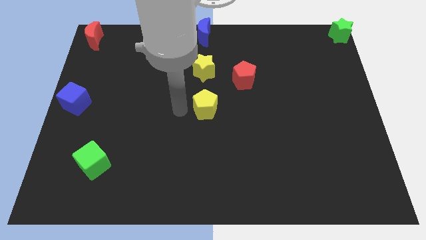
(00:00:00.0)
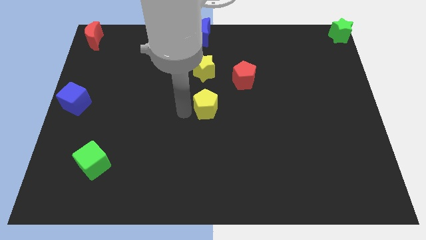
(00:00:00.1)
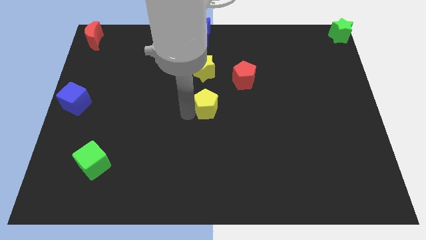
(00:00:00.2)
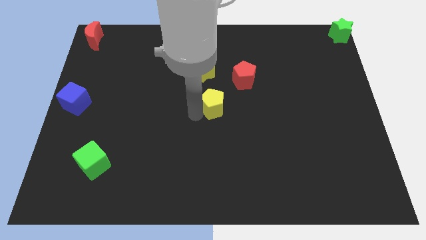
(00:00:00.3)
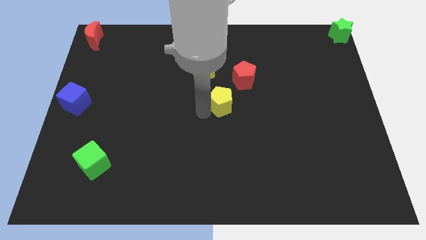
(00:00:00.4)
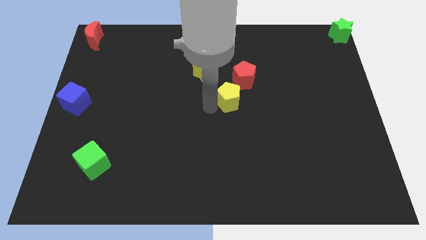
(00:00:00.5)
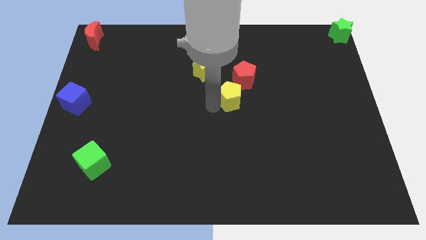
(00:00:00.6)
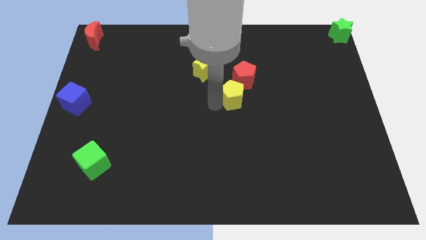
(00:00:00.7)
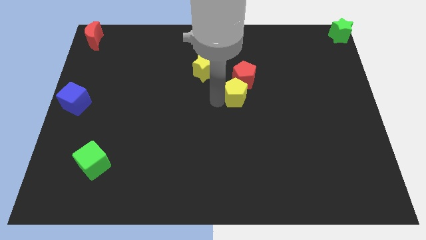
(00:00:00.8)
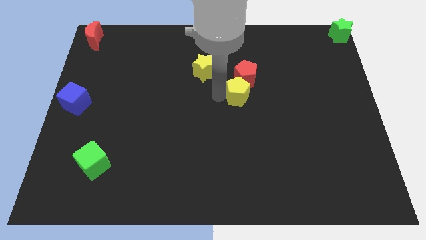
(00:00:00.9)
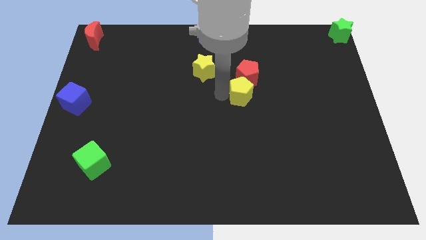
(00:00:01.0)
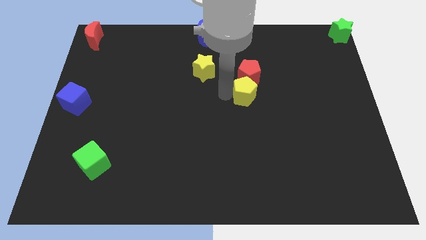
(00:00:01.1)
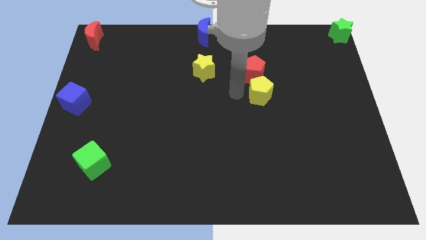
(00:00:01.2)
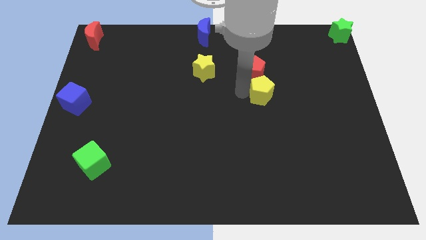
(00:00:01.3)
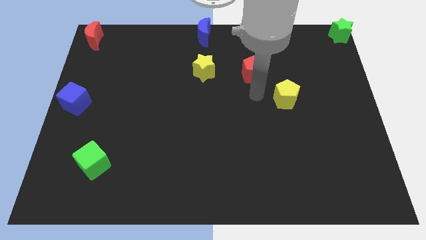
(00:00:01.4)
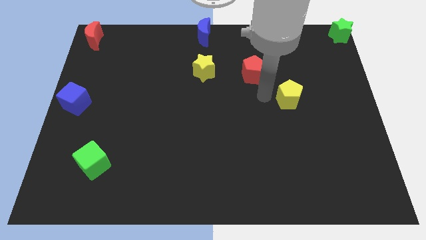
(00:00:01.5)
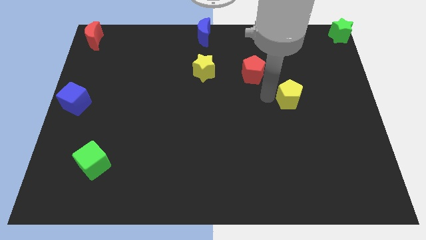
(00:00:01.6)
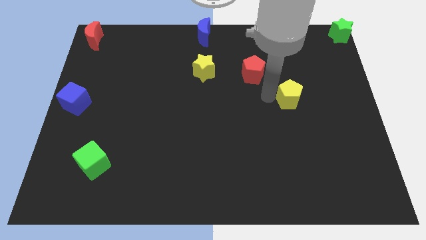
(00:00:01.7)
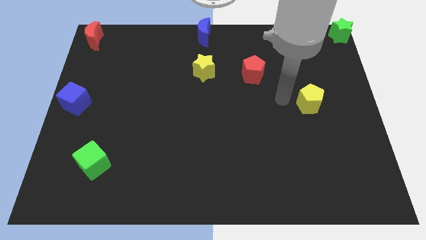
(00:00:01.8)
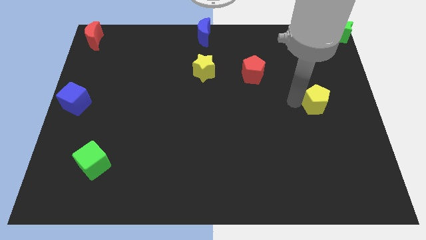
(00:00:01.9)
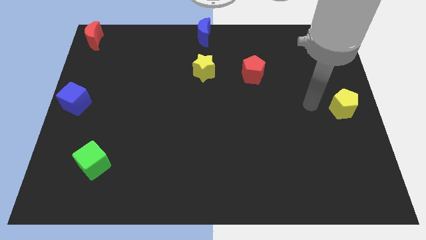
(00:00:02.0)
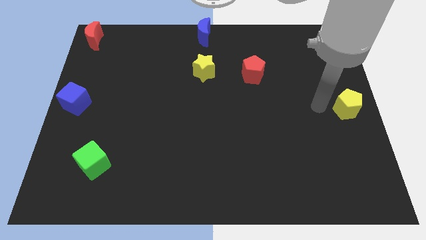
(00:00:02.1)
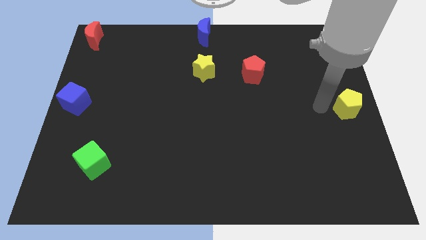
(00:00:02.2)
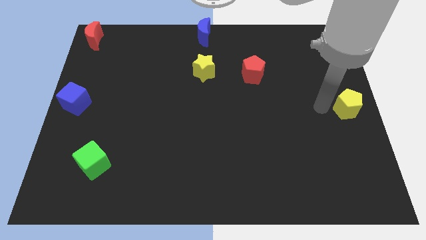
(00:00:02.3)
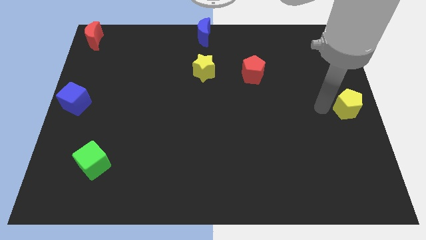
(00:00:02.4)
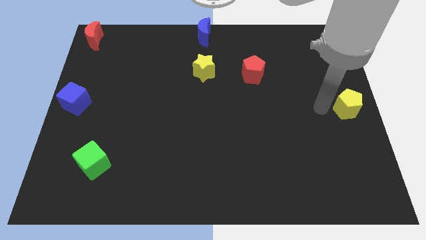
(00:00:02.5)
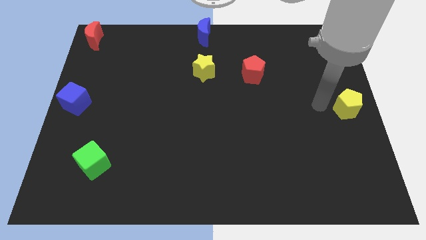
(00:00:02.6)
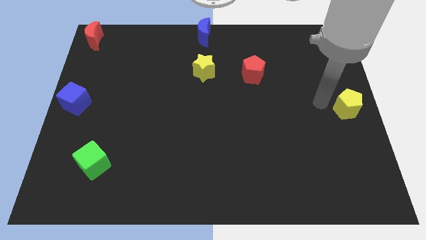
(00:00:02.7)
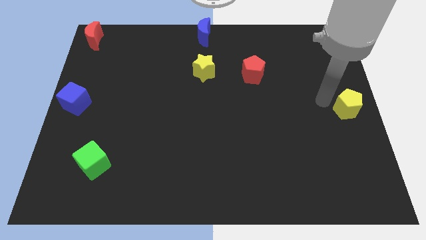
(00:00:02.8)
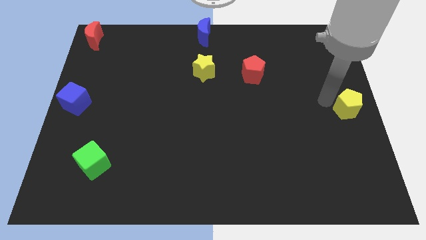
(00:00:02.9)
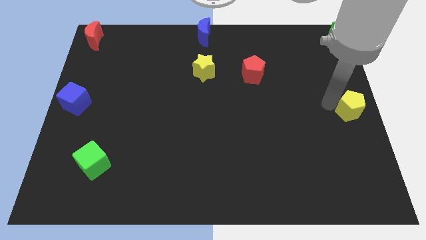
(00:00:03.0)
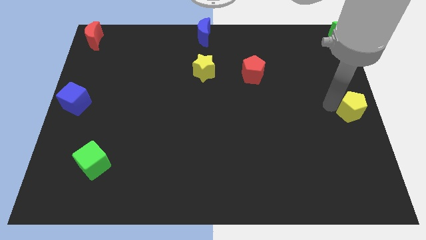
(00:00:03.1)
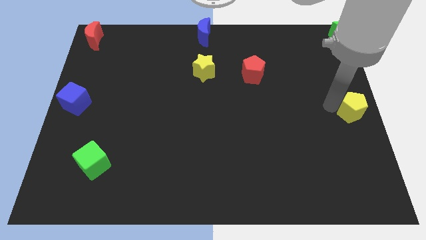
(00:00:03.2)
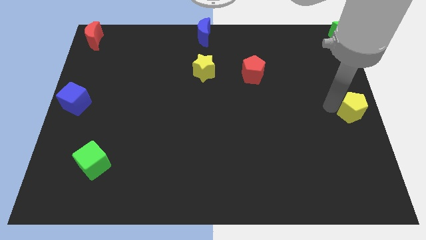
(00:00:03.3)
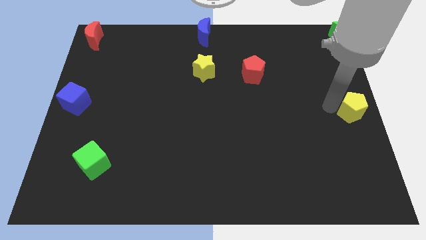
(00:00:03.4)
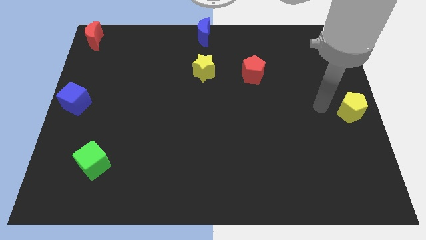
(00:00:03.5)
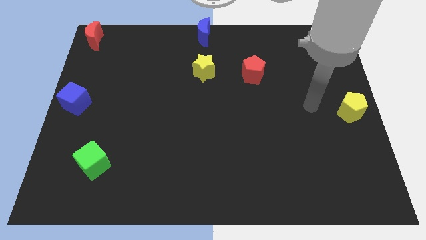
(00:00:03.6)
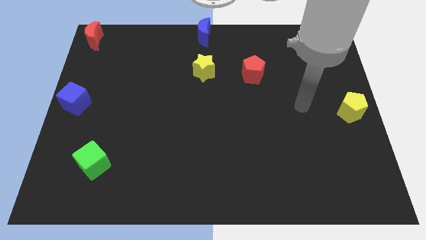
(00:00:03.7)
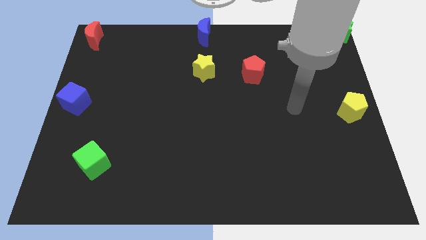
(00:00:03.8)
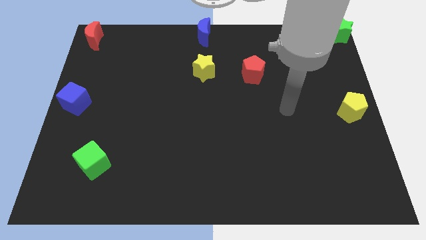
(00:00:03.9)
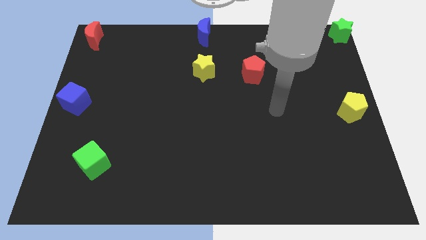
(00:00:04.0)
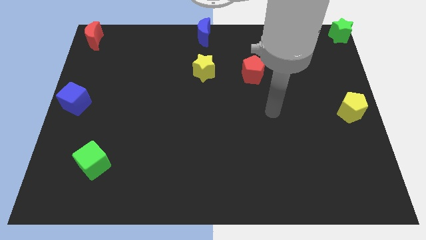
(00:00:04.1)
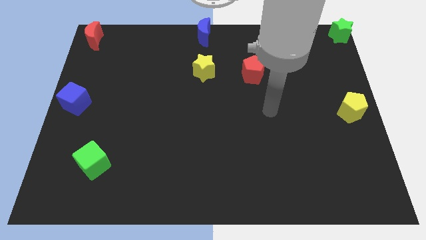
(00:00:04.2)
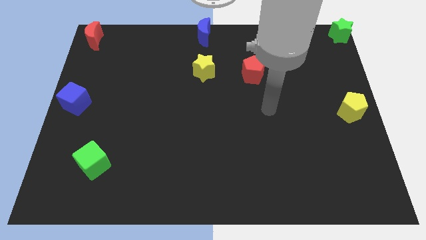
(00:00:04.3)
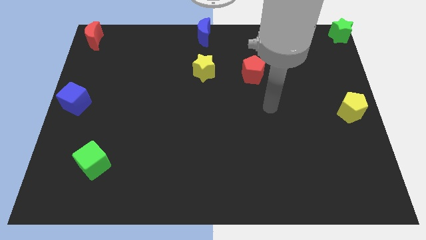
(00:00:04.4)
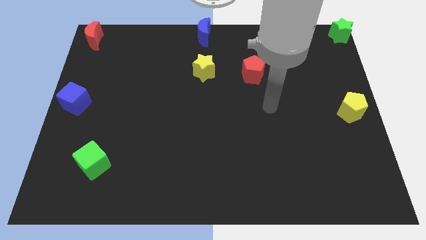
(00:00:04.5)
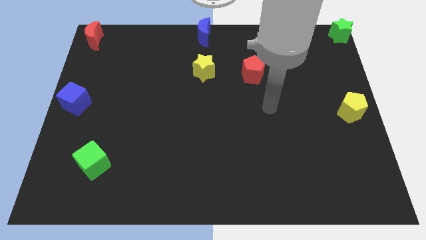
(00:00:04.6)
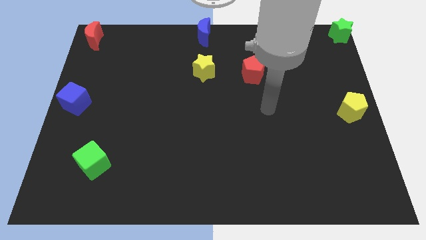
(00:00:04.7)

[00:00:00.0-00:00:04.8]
move the yellow pentagon to the right center of the board

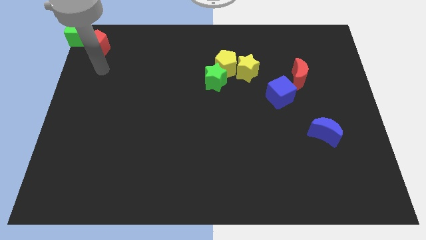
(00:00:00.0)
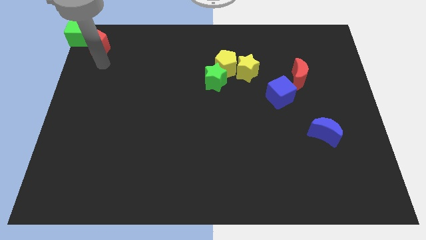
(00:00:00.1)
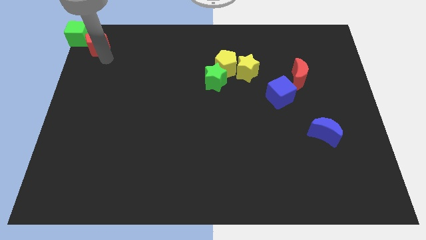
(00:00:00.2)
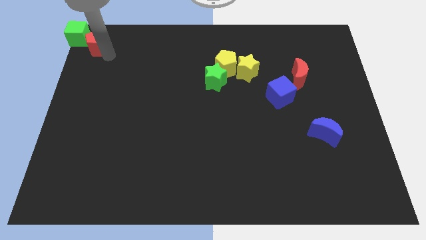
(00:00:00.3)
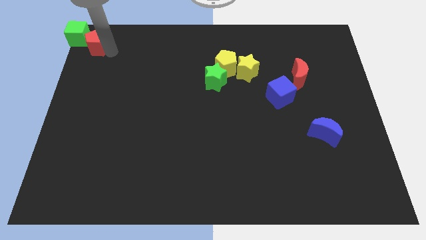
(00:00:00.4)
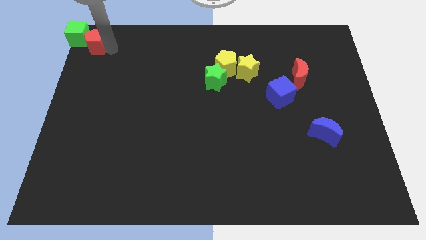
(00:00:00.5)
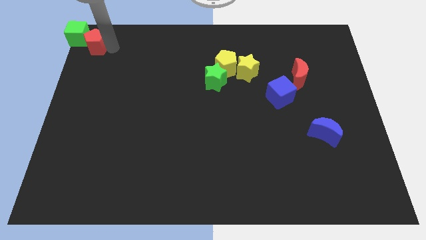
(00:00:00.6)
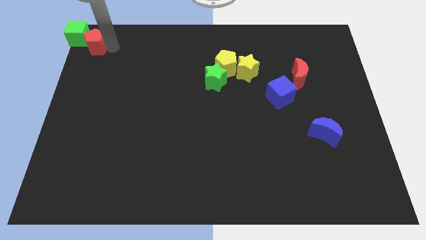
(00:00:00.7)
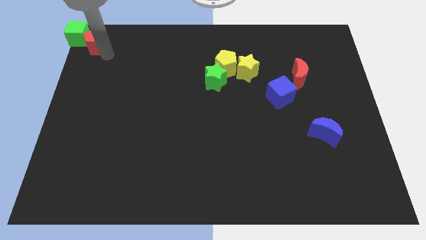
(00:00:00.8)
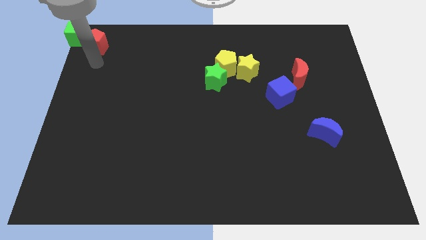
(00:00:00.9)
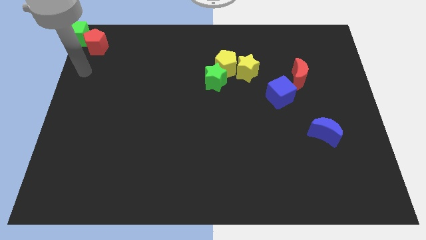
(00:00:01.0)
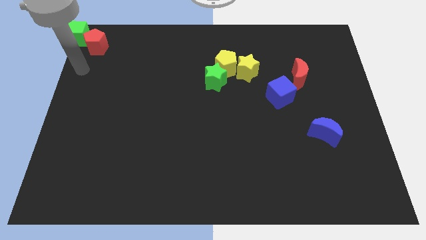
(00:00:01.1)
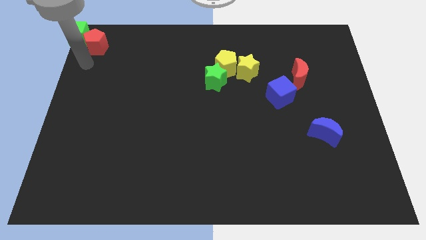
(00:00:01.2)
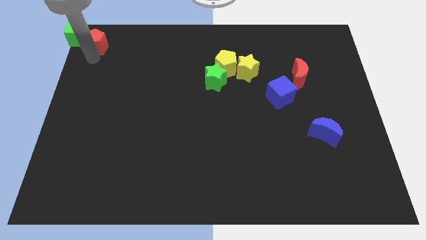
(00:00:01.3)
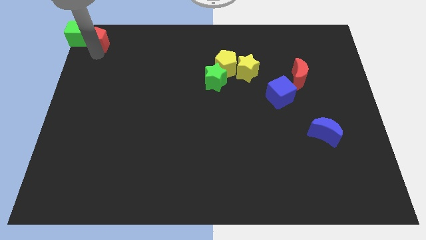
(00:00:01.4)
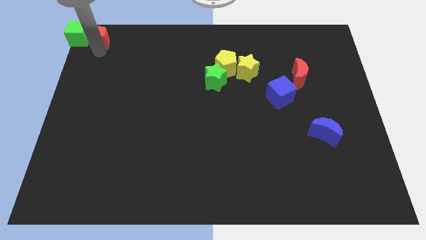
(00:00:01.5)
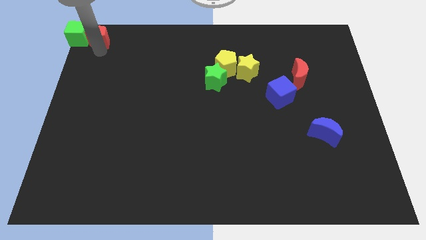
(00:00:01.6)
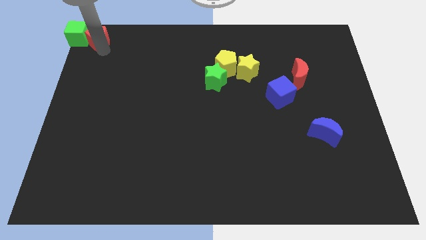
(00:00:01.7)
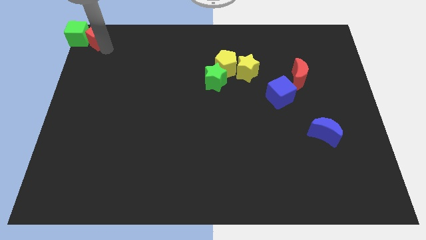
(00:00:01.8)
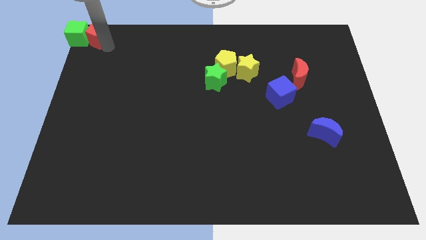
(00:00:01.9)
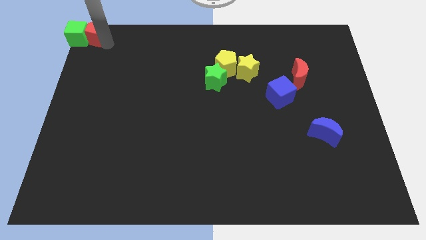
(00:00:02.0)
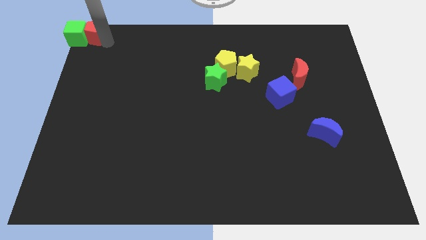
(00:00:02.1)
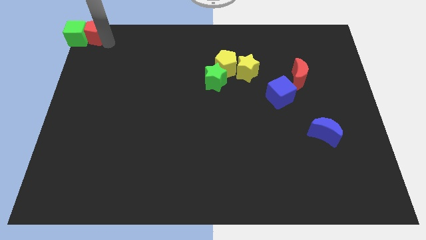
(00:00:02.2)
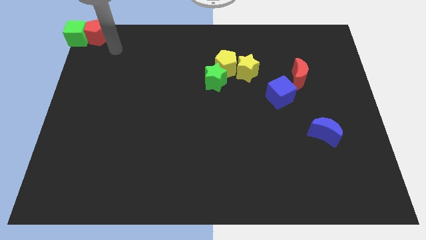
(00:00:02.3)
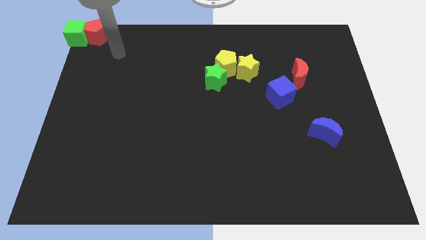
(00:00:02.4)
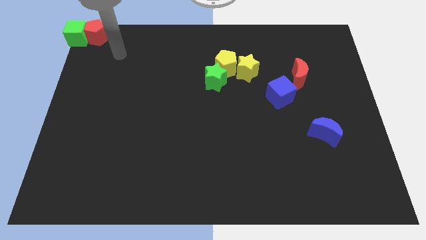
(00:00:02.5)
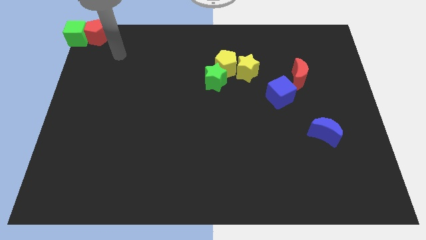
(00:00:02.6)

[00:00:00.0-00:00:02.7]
place red pentagon to the right of the green cube

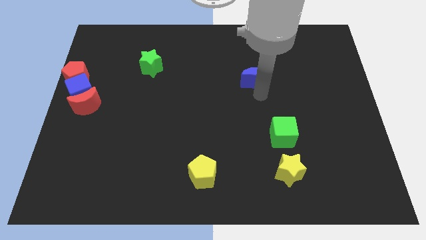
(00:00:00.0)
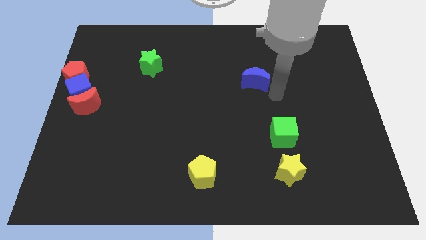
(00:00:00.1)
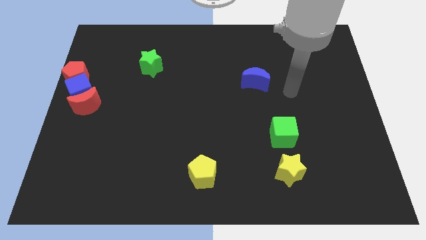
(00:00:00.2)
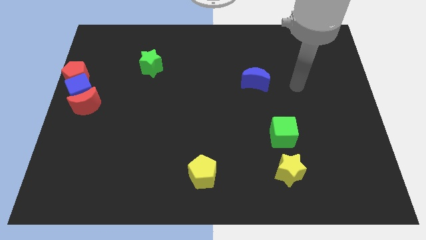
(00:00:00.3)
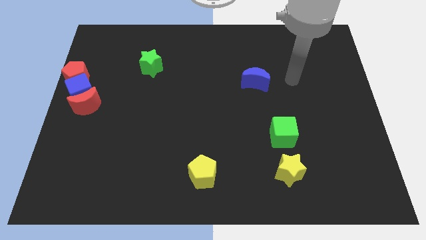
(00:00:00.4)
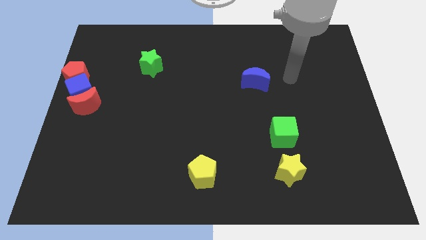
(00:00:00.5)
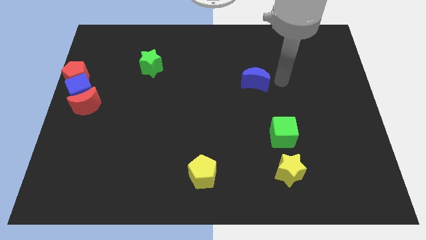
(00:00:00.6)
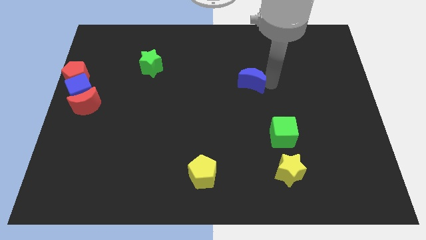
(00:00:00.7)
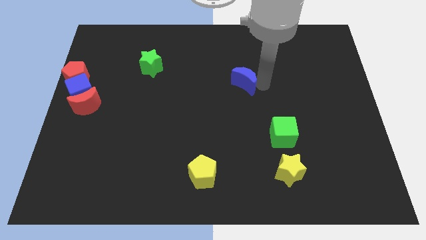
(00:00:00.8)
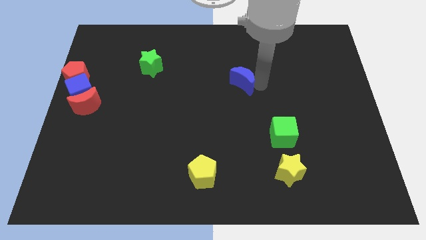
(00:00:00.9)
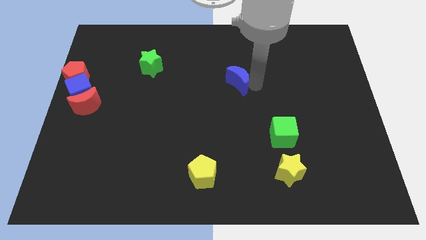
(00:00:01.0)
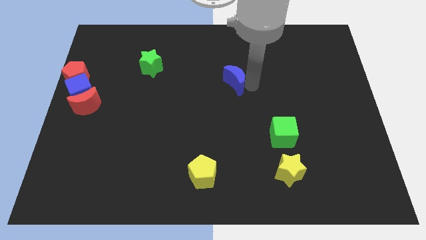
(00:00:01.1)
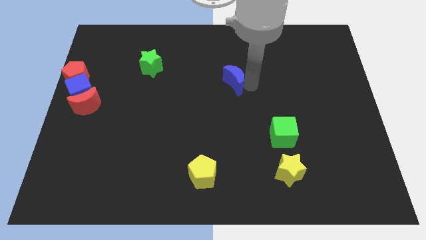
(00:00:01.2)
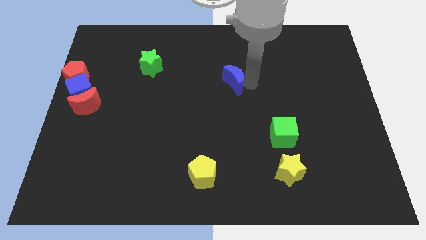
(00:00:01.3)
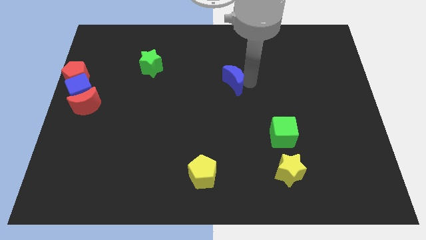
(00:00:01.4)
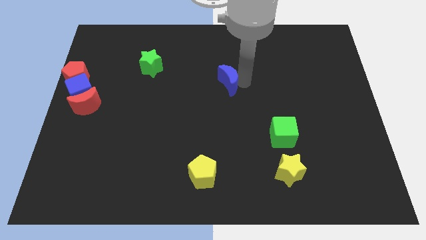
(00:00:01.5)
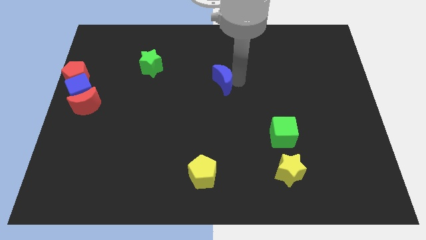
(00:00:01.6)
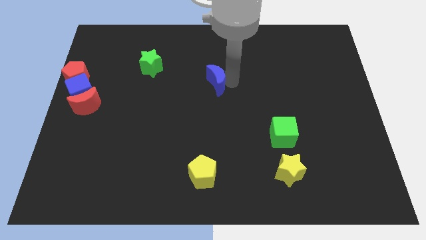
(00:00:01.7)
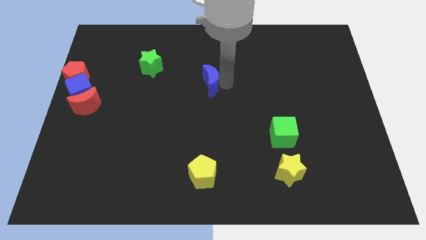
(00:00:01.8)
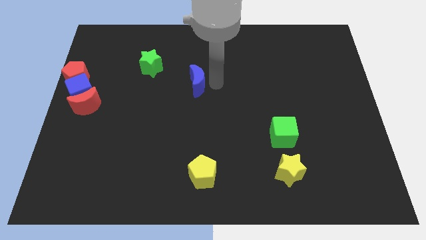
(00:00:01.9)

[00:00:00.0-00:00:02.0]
place the blue moon vertical to the top side of the yellow pentagon
